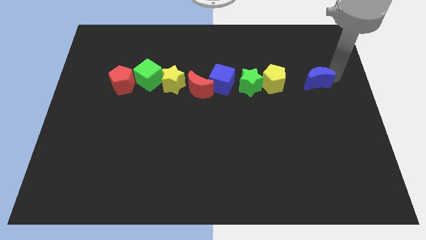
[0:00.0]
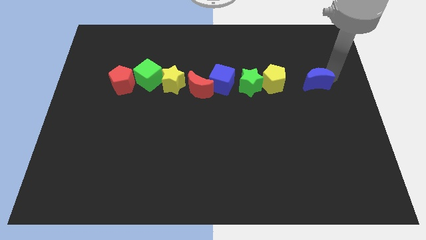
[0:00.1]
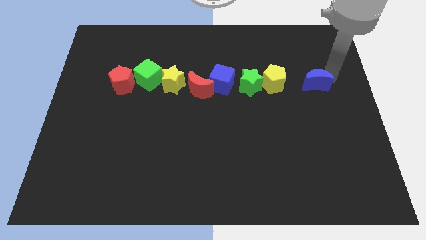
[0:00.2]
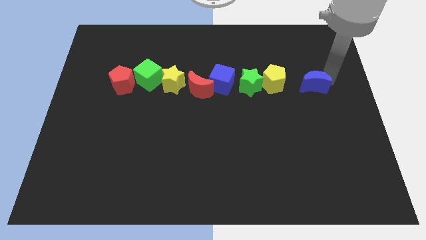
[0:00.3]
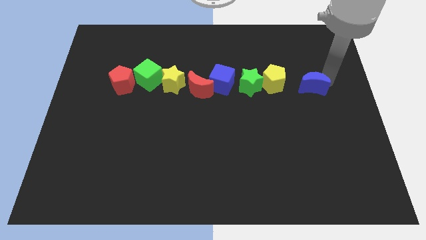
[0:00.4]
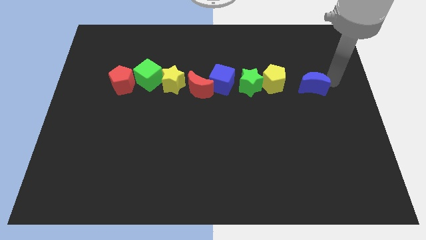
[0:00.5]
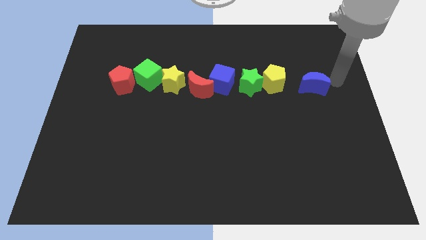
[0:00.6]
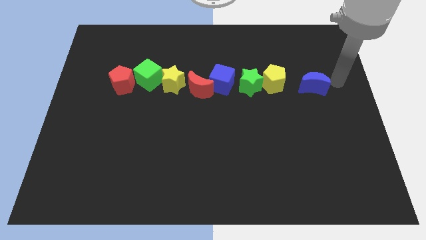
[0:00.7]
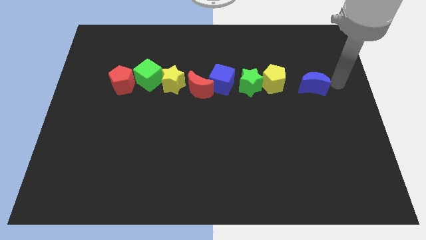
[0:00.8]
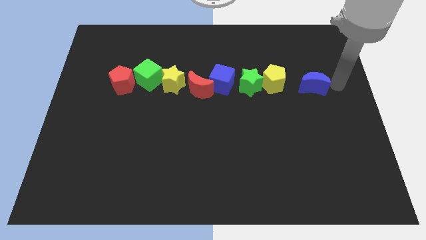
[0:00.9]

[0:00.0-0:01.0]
place the blue moon to the right of the yellow pentagon

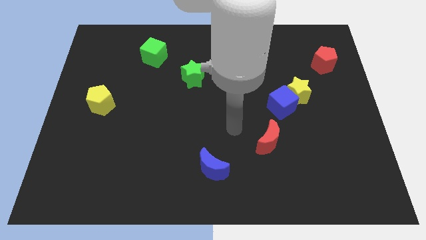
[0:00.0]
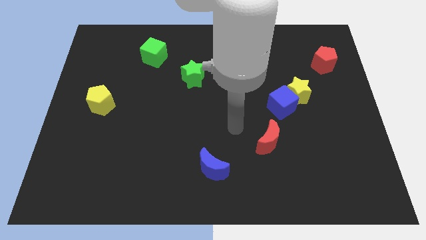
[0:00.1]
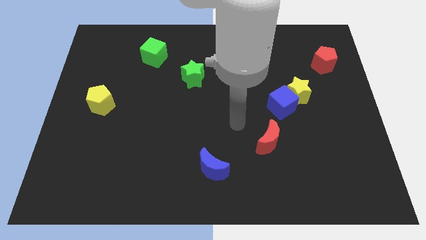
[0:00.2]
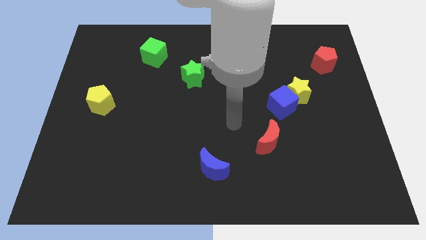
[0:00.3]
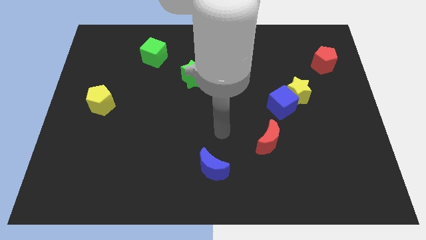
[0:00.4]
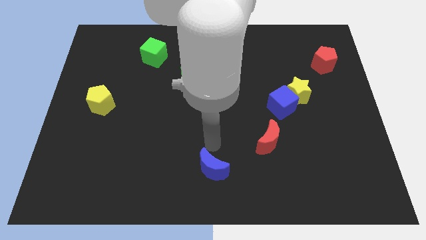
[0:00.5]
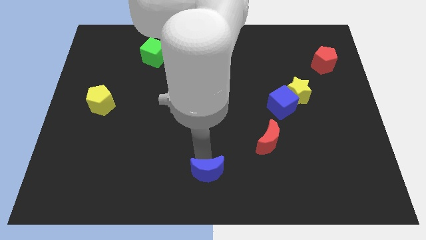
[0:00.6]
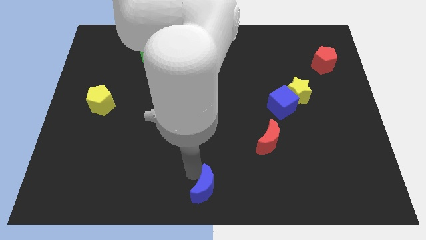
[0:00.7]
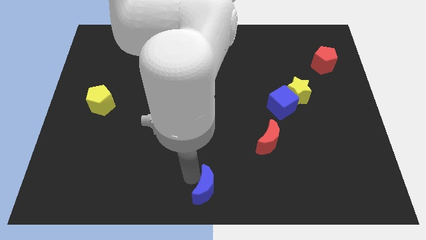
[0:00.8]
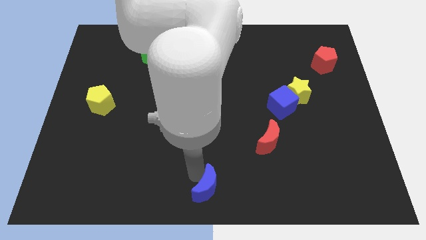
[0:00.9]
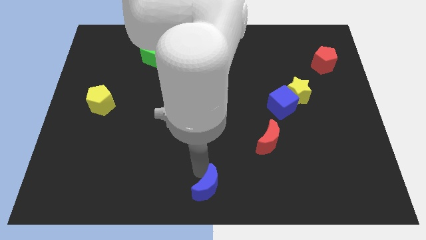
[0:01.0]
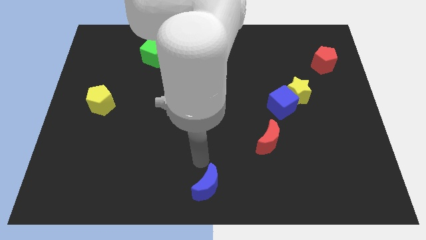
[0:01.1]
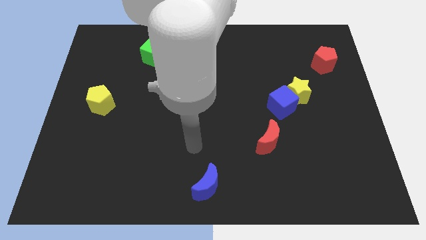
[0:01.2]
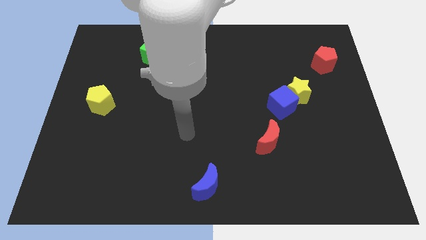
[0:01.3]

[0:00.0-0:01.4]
place the blue crescent at the bottom center of the board

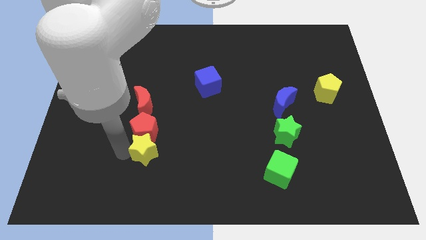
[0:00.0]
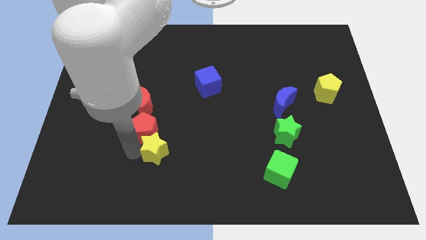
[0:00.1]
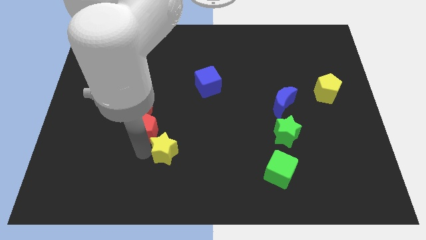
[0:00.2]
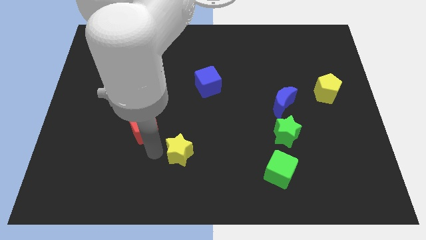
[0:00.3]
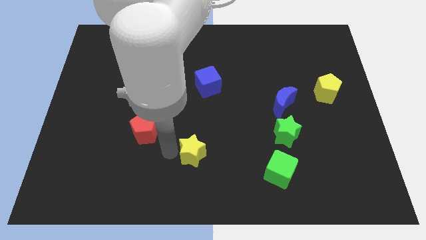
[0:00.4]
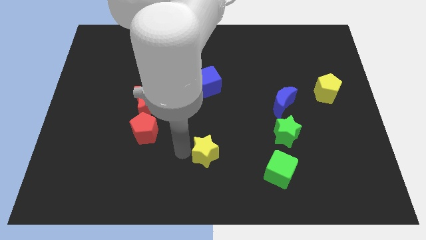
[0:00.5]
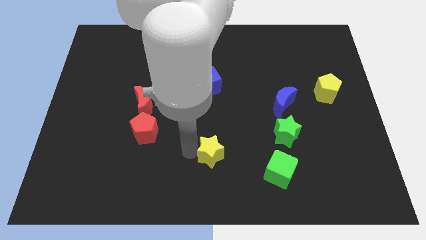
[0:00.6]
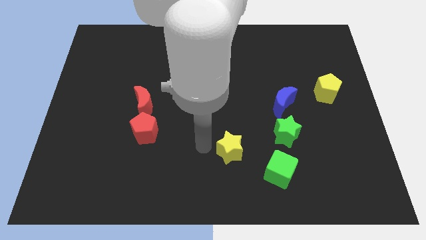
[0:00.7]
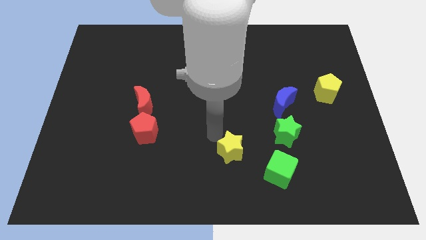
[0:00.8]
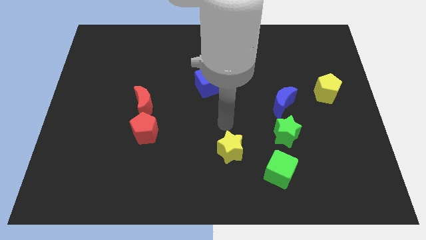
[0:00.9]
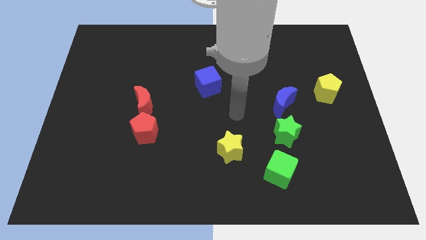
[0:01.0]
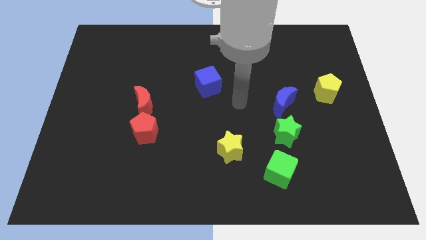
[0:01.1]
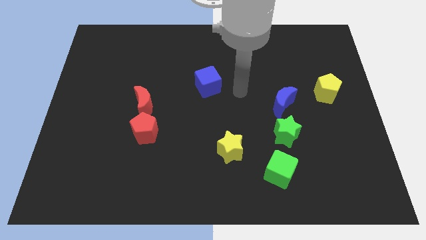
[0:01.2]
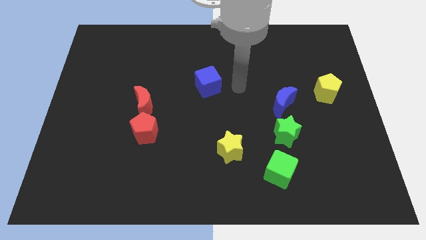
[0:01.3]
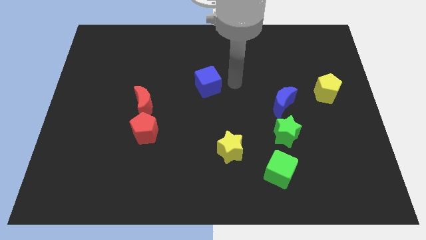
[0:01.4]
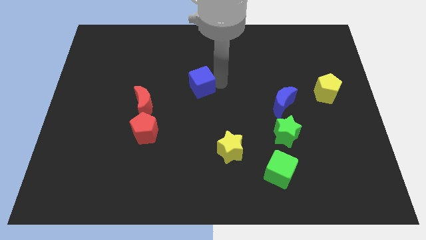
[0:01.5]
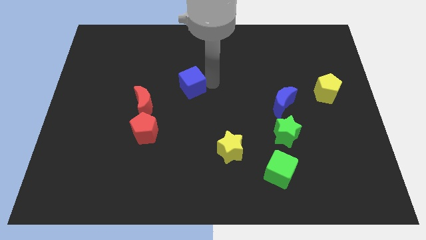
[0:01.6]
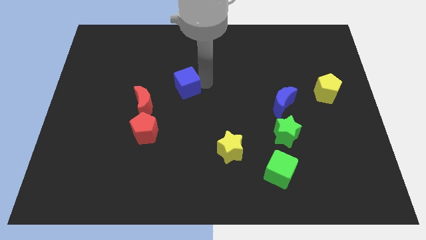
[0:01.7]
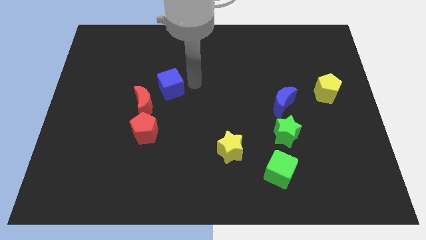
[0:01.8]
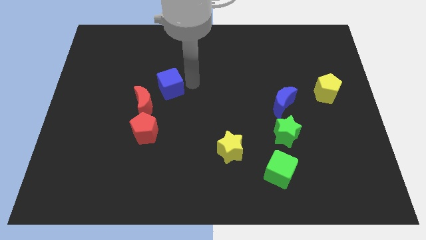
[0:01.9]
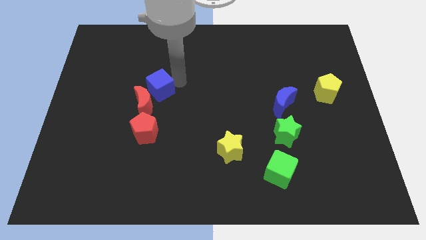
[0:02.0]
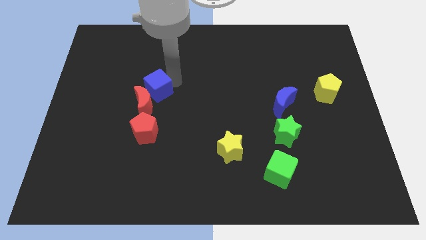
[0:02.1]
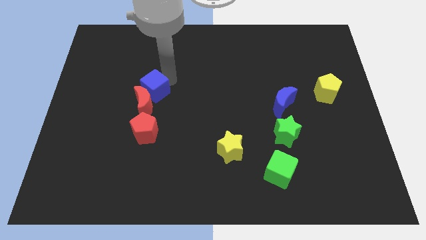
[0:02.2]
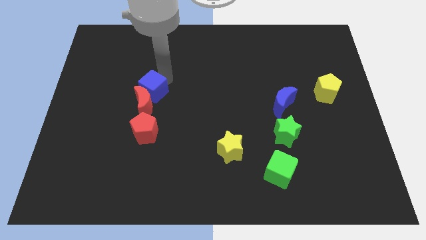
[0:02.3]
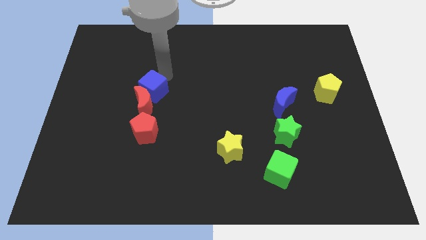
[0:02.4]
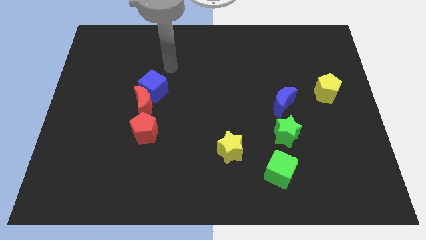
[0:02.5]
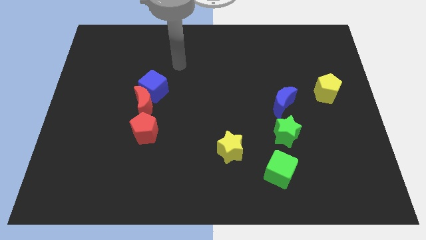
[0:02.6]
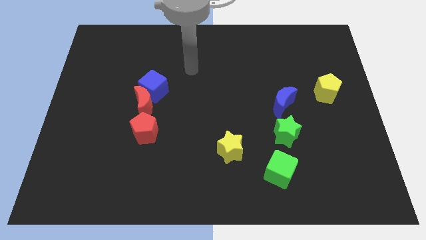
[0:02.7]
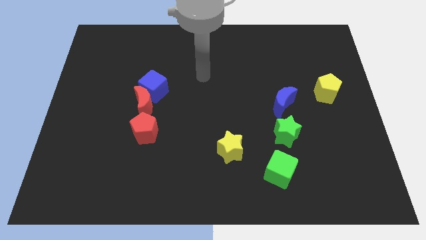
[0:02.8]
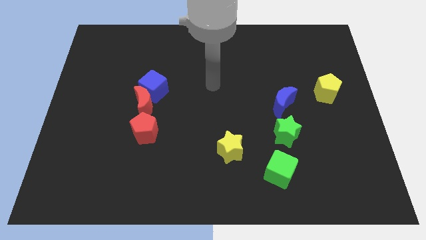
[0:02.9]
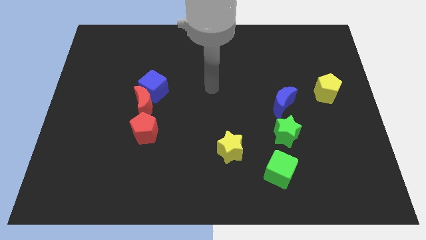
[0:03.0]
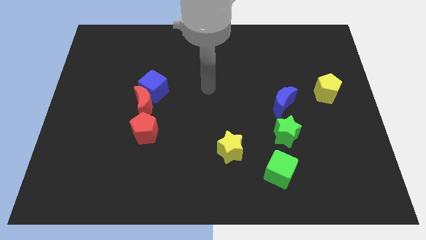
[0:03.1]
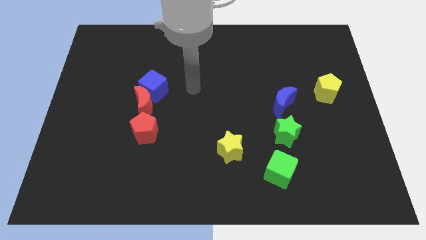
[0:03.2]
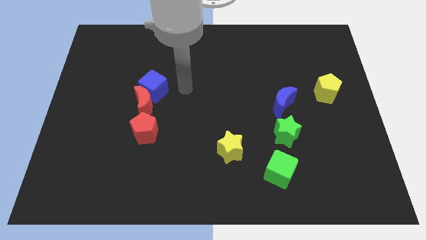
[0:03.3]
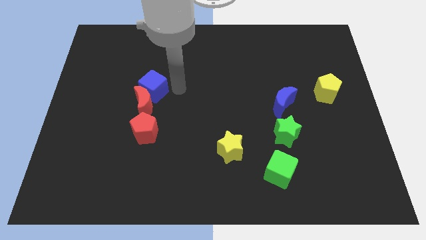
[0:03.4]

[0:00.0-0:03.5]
place the blue cube close to red crescent

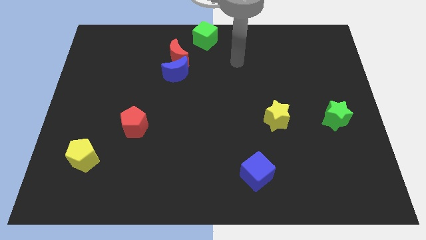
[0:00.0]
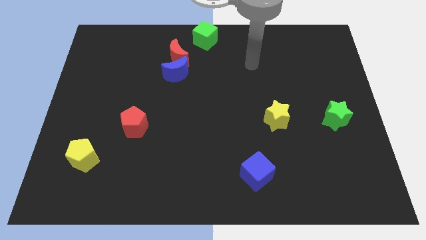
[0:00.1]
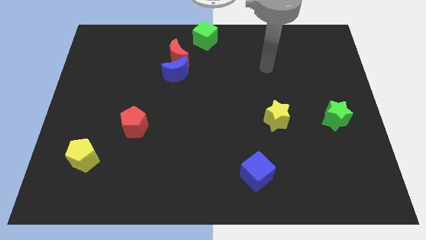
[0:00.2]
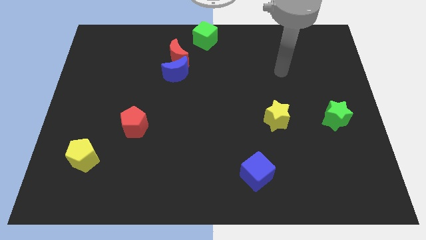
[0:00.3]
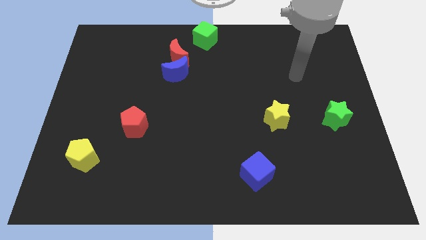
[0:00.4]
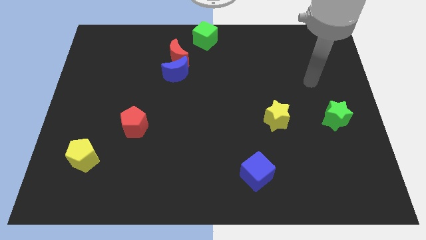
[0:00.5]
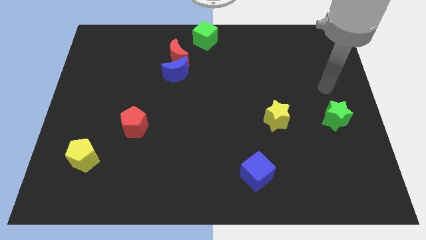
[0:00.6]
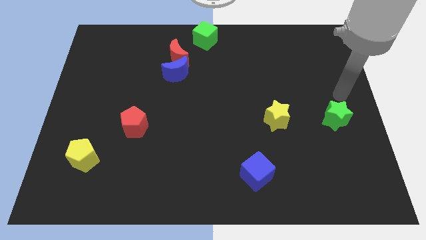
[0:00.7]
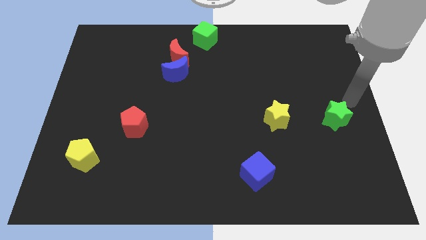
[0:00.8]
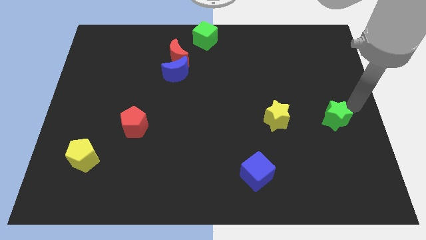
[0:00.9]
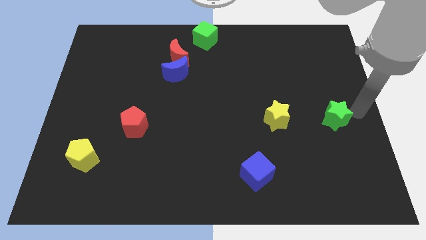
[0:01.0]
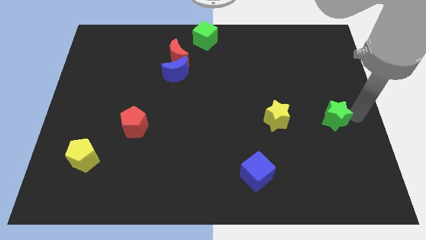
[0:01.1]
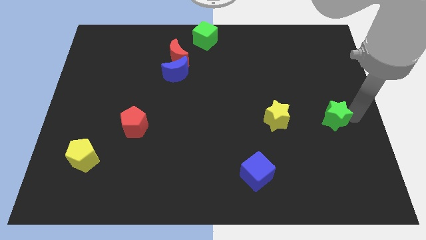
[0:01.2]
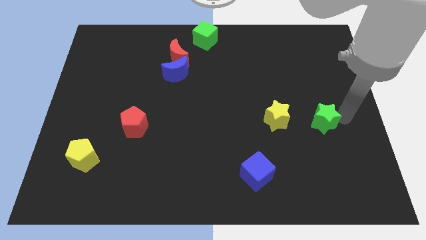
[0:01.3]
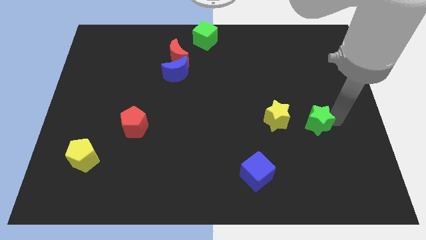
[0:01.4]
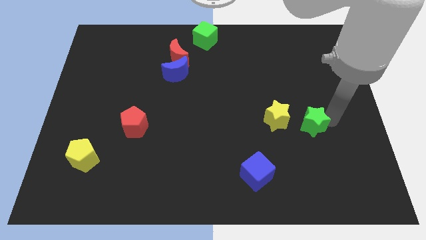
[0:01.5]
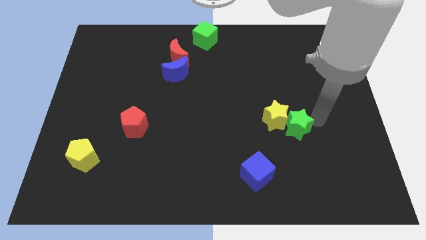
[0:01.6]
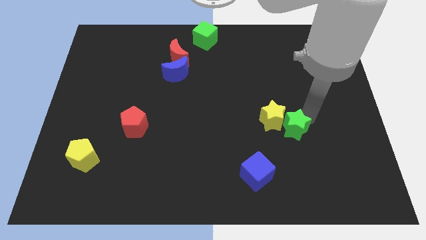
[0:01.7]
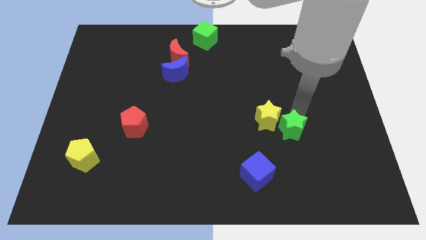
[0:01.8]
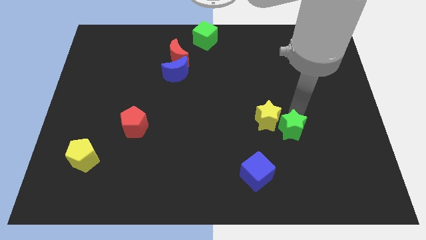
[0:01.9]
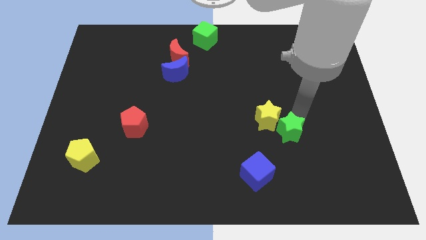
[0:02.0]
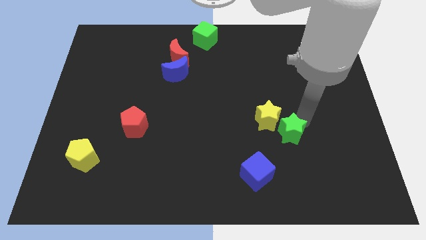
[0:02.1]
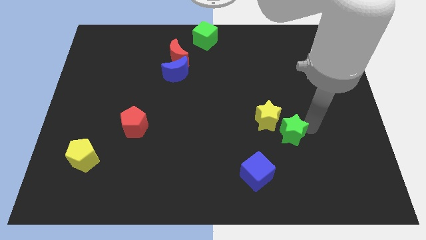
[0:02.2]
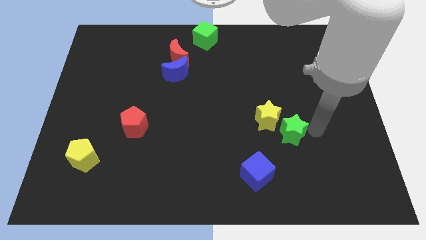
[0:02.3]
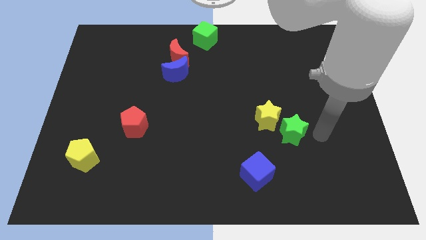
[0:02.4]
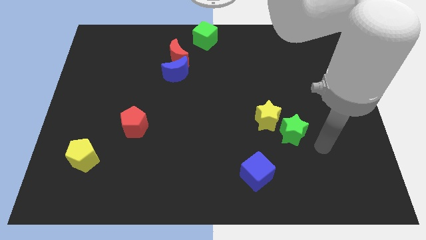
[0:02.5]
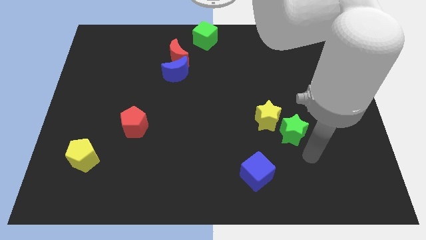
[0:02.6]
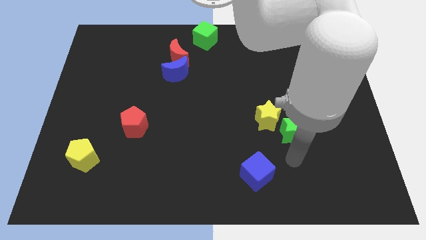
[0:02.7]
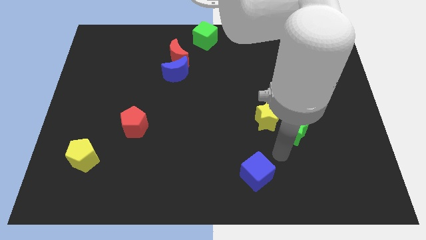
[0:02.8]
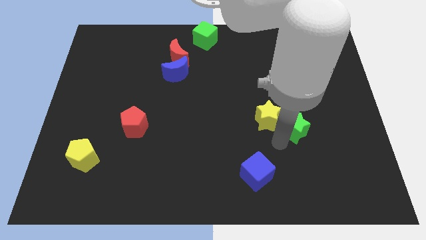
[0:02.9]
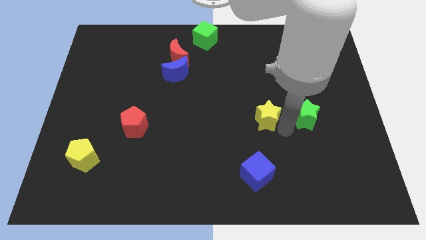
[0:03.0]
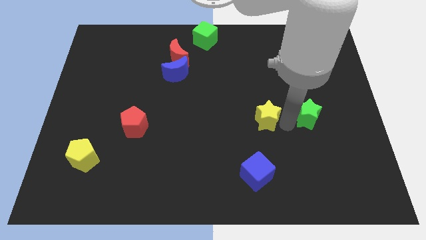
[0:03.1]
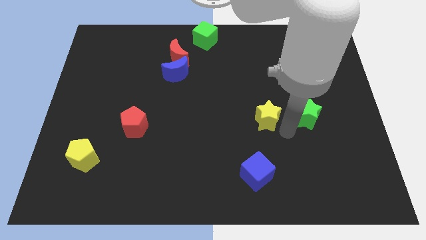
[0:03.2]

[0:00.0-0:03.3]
place the green star to the right side of the yellow star
